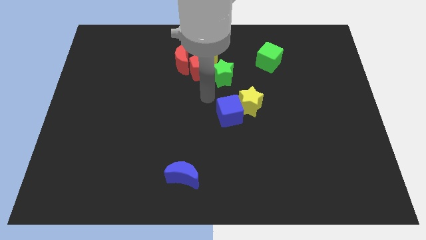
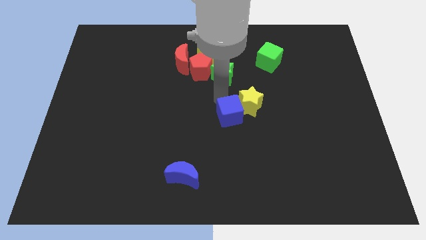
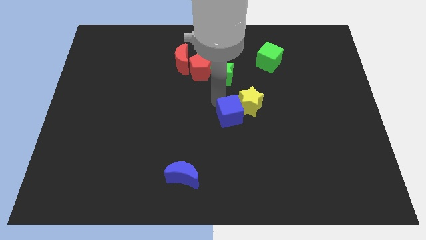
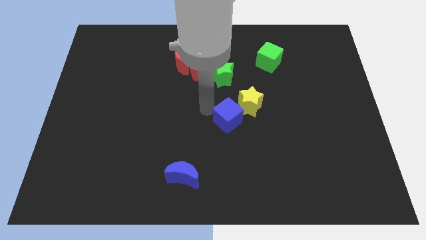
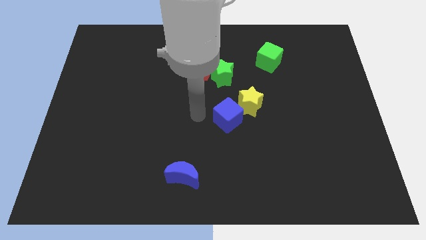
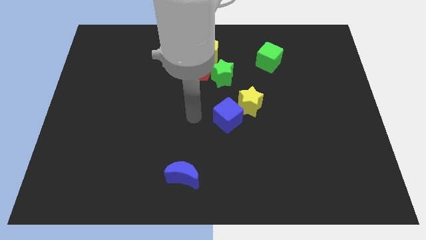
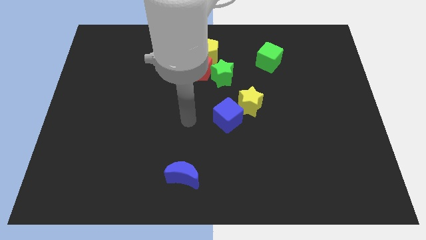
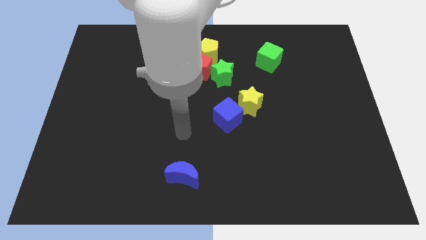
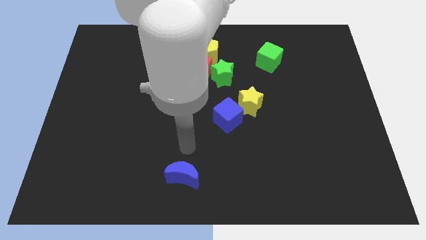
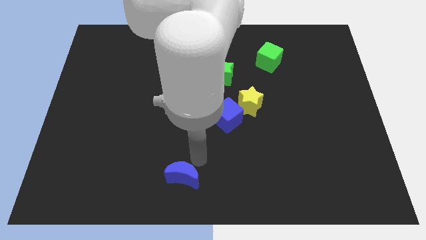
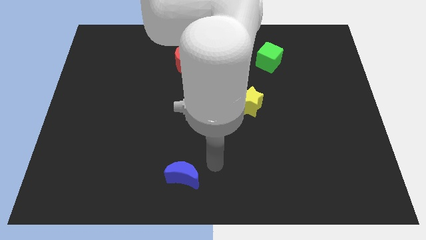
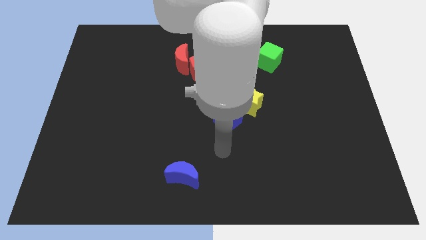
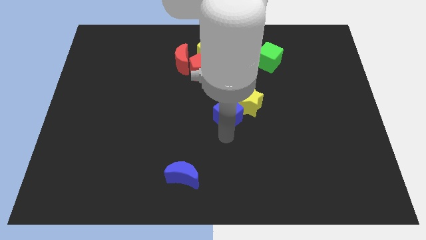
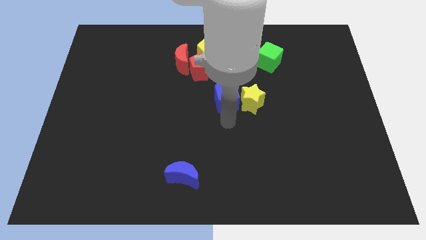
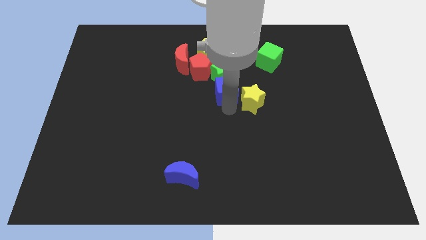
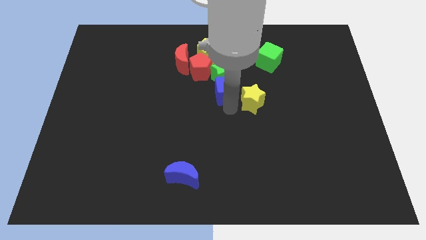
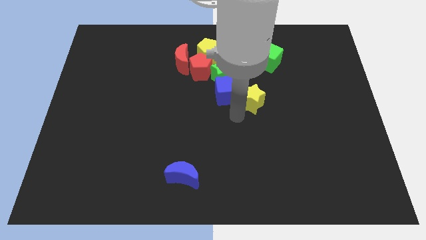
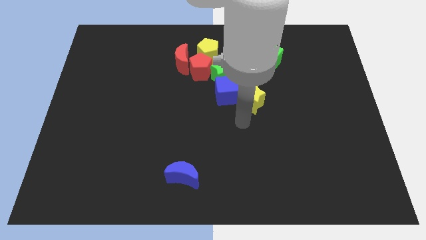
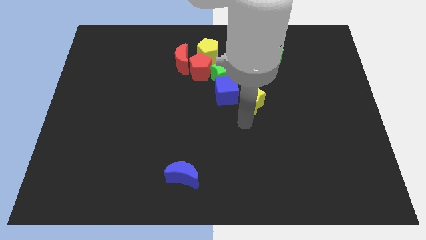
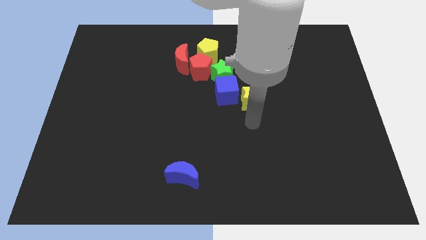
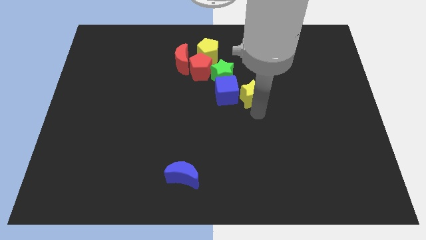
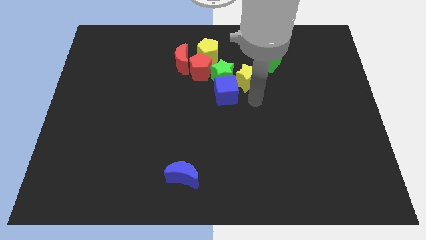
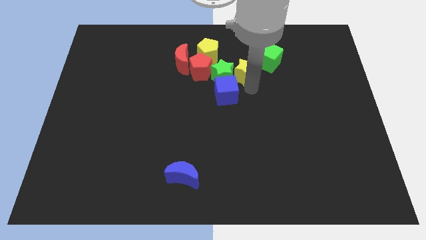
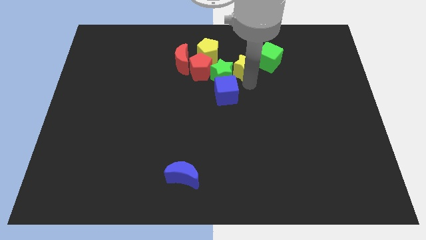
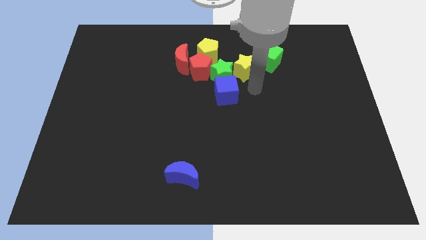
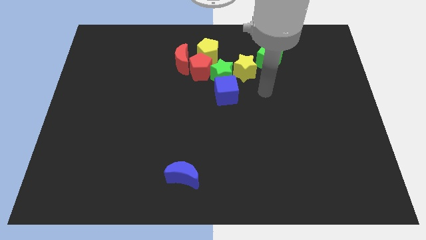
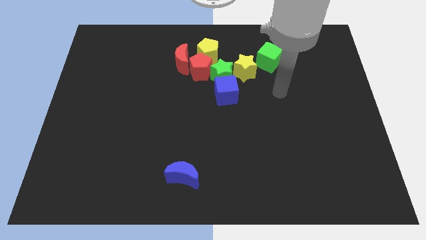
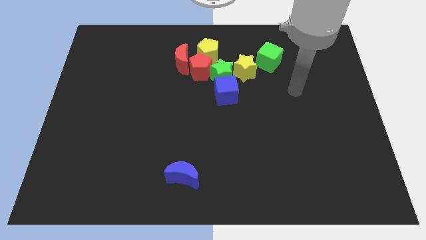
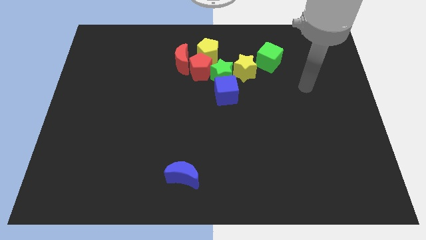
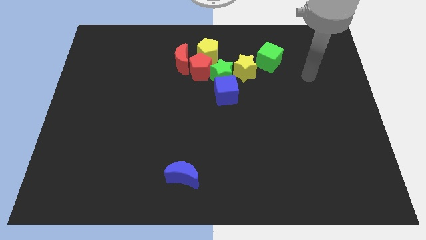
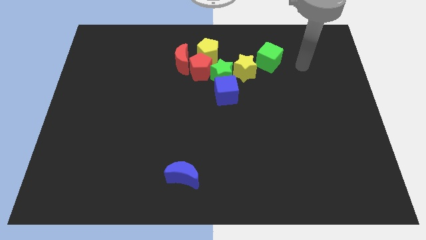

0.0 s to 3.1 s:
push yellow star to the right of green star

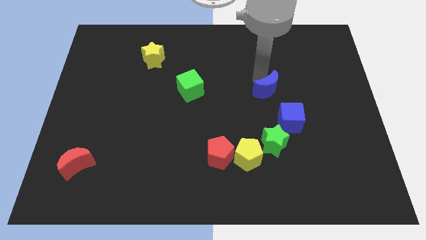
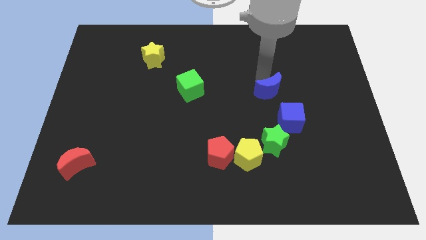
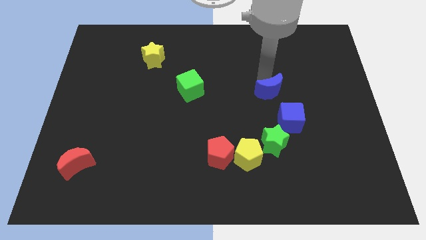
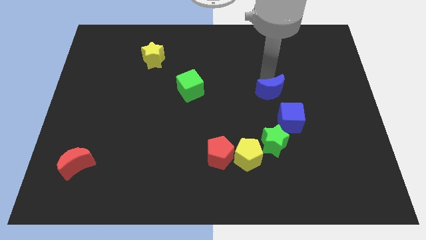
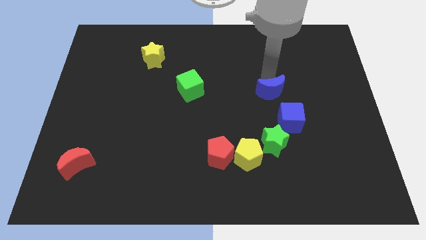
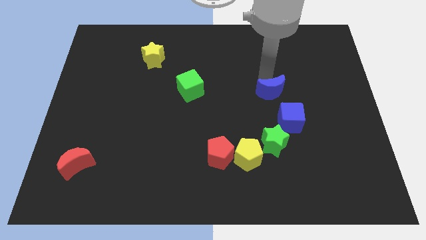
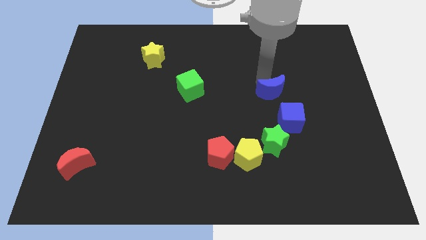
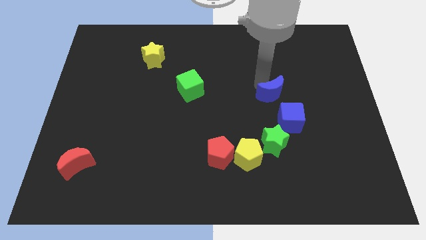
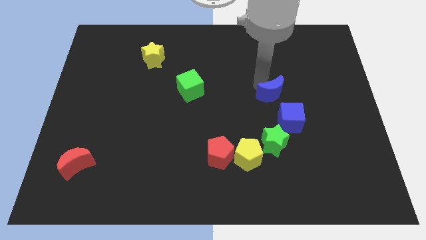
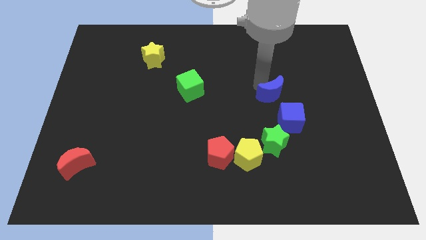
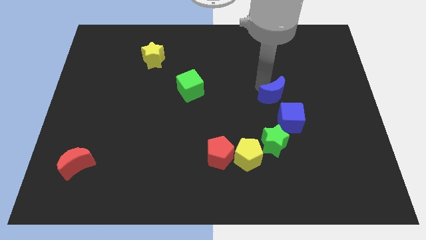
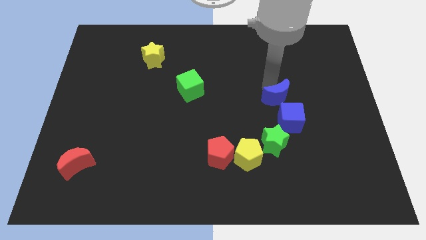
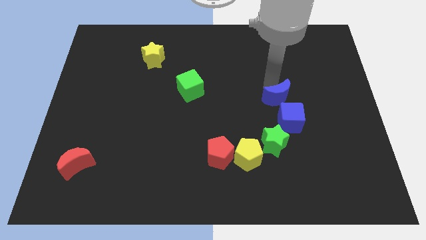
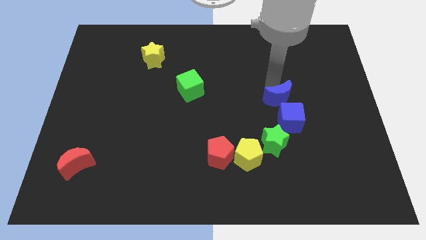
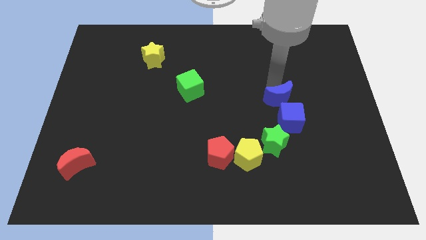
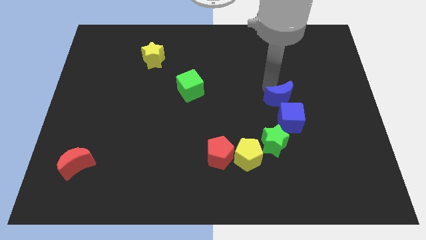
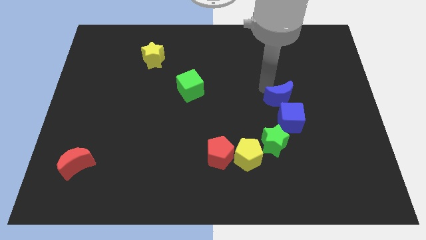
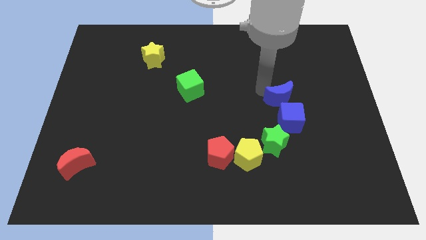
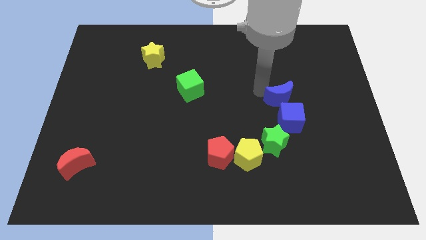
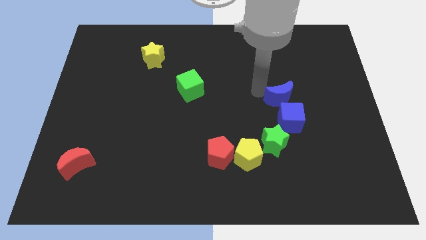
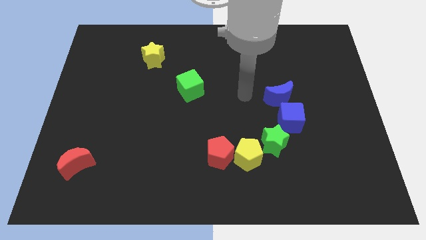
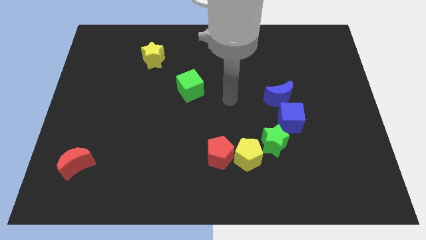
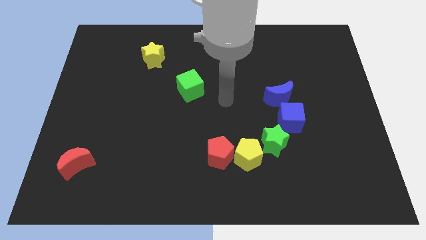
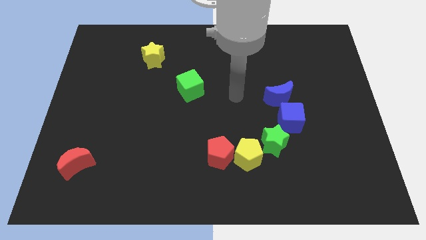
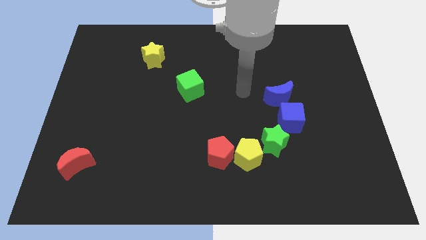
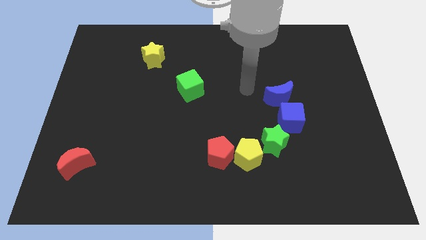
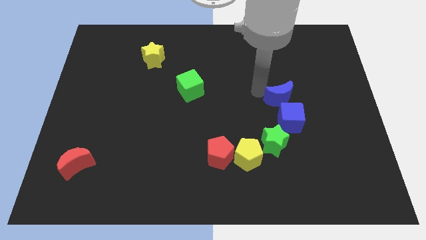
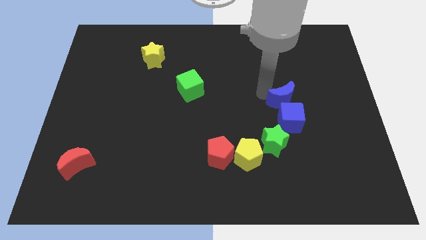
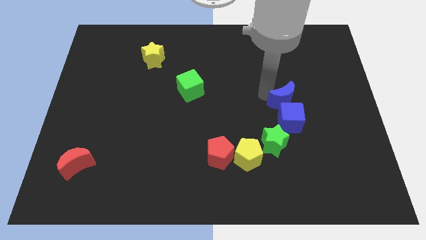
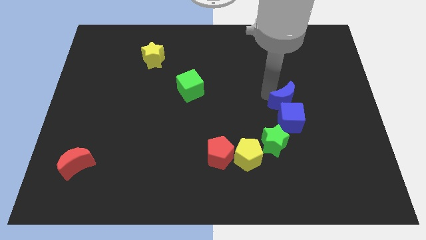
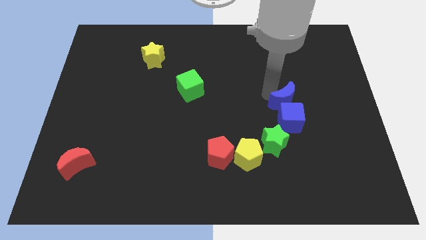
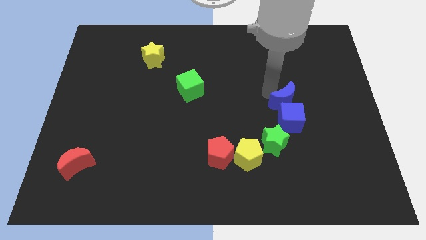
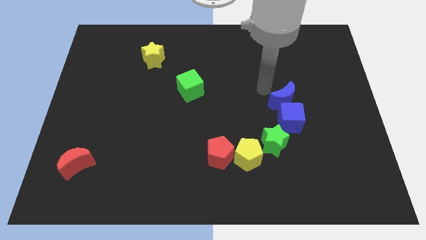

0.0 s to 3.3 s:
move the blue crescent above the blue cube

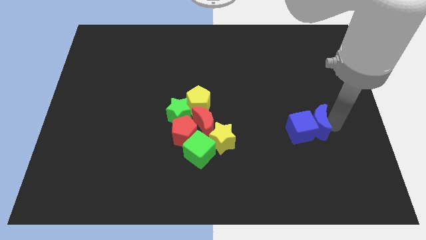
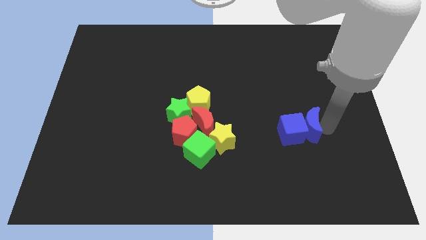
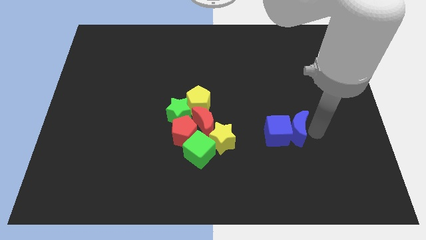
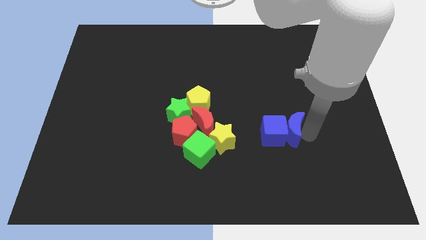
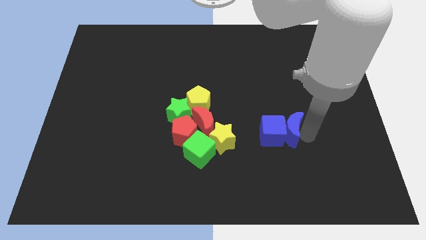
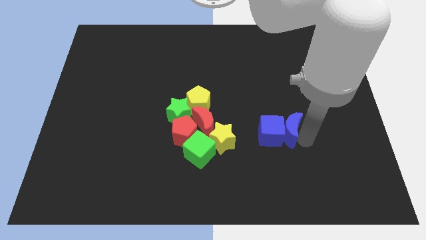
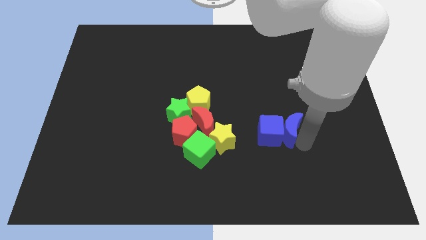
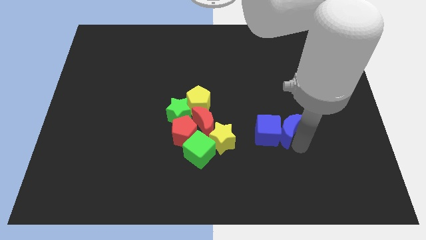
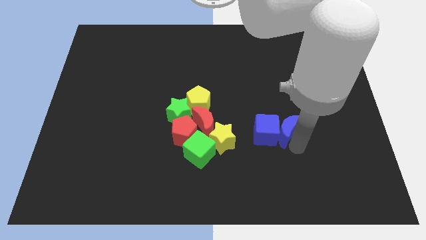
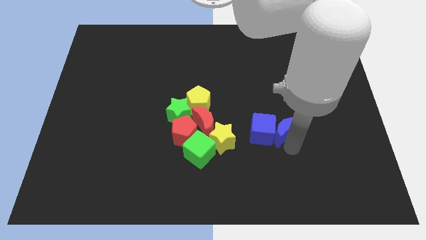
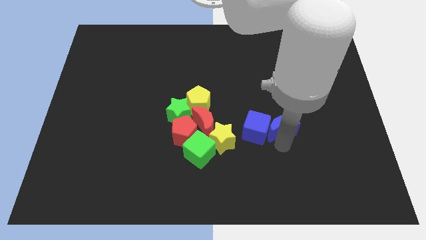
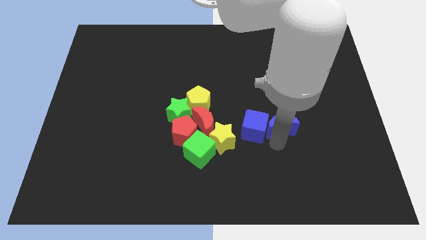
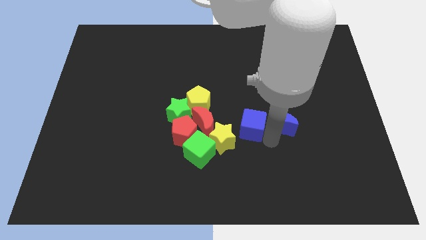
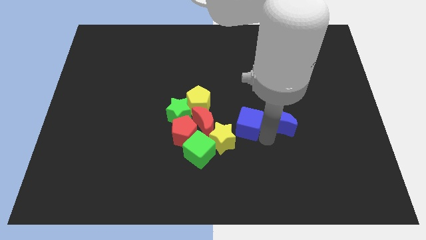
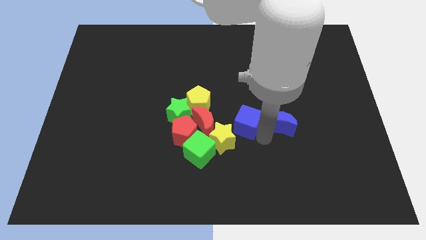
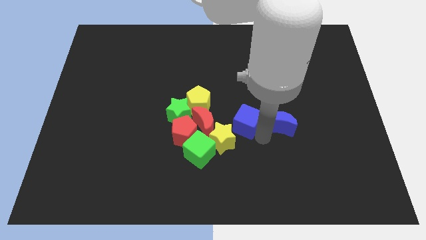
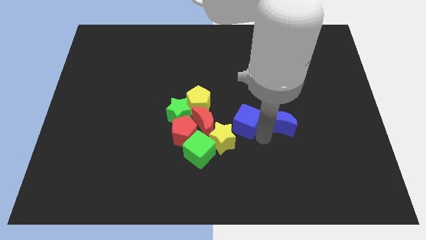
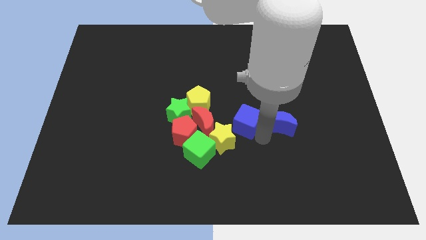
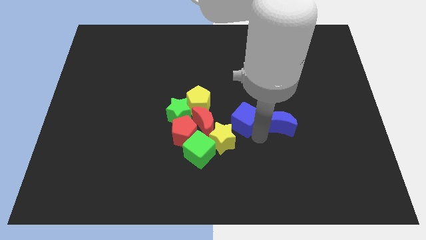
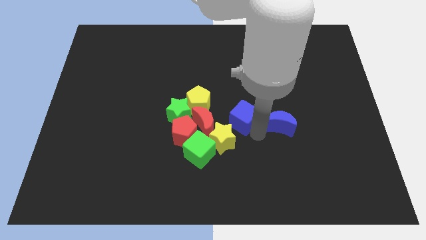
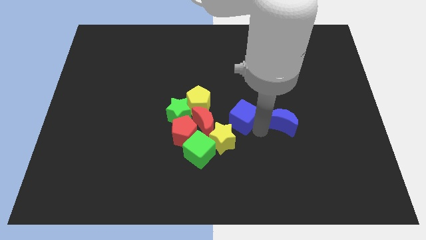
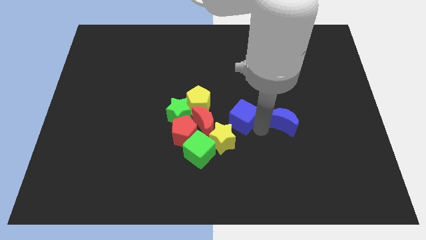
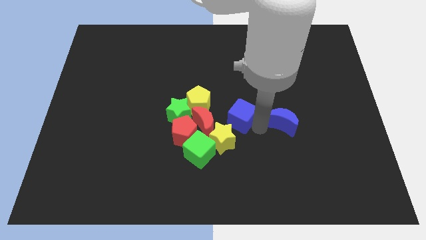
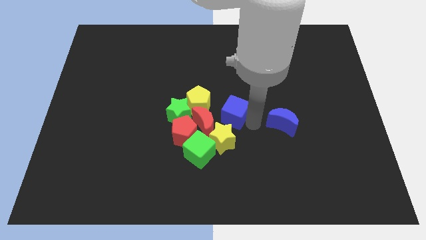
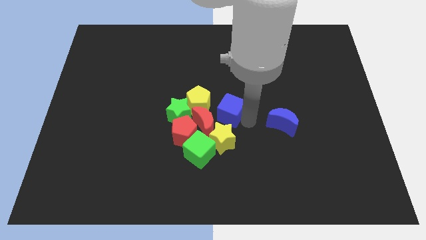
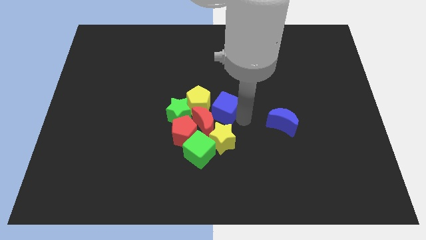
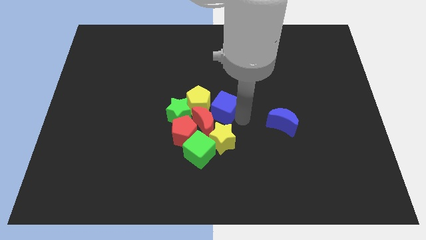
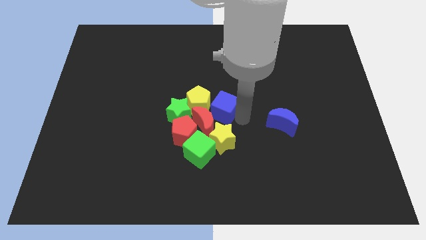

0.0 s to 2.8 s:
move the blue cube close to the yellow pentagon
